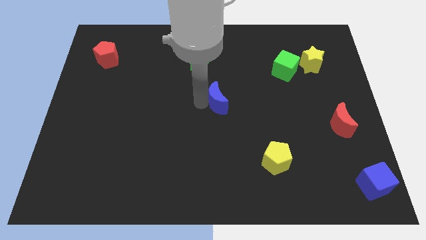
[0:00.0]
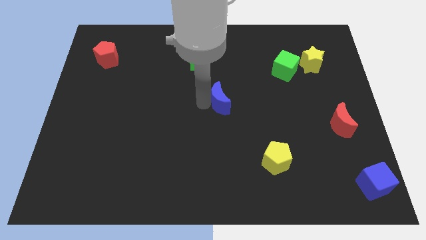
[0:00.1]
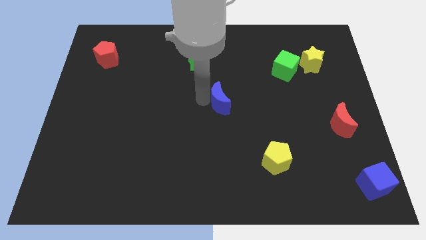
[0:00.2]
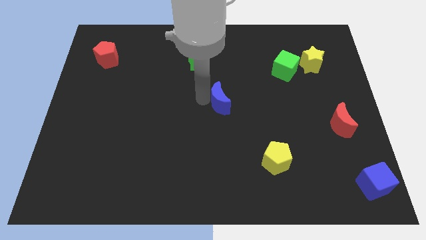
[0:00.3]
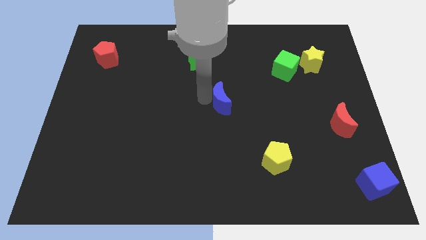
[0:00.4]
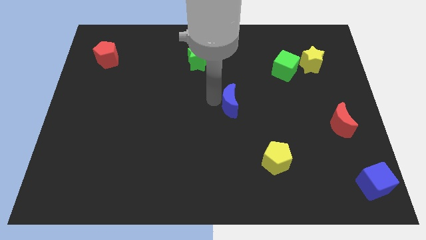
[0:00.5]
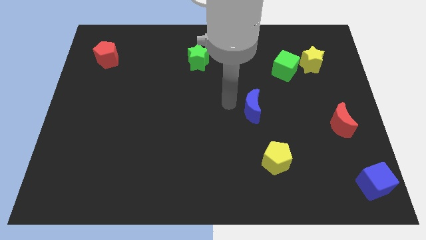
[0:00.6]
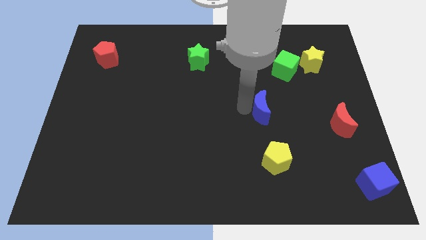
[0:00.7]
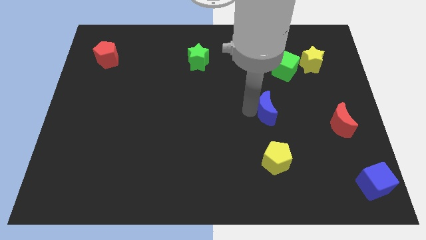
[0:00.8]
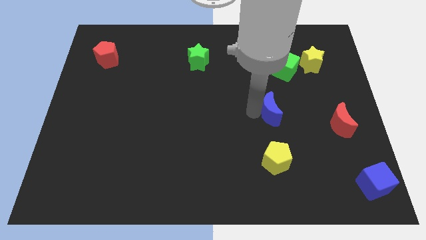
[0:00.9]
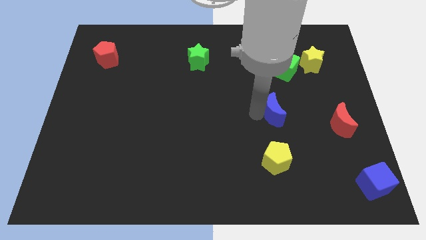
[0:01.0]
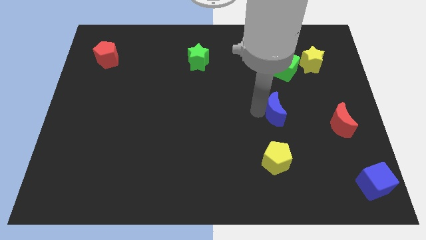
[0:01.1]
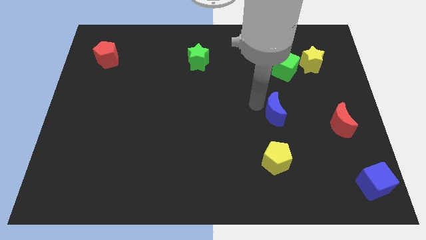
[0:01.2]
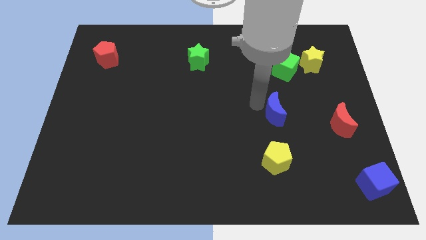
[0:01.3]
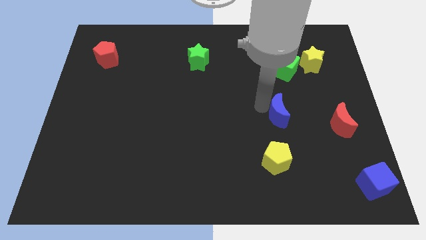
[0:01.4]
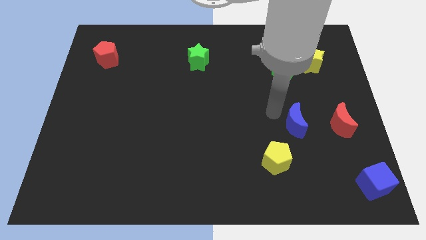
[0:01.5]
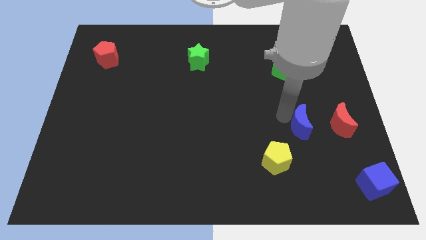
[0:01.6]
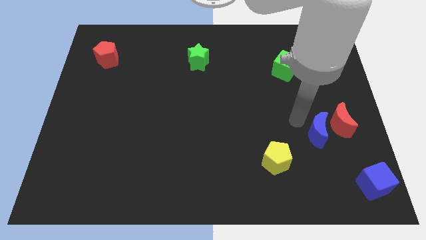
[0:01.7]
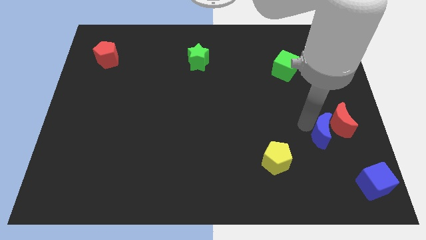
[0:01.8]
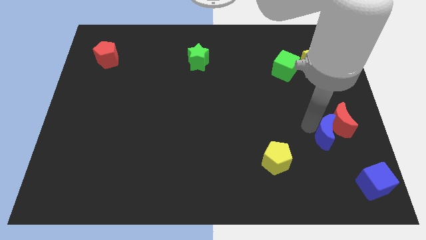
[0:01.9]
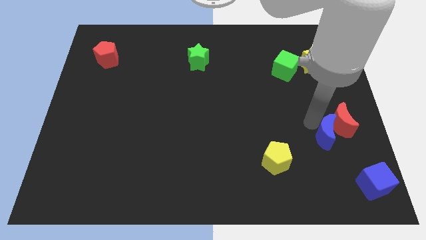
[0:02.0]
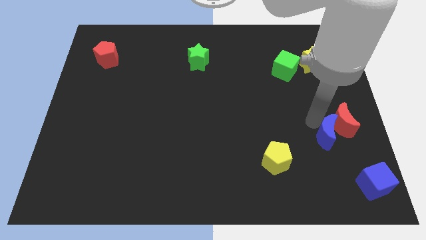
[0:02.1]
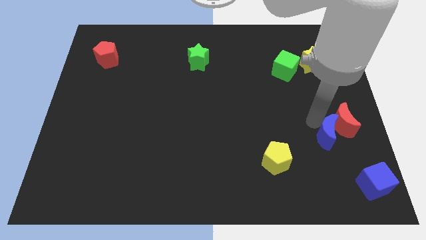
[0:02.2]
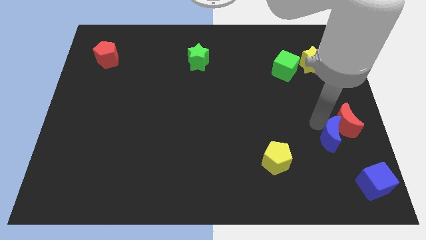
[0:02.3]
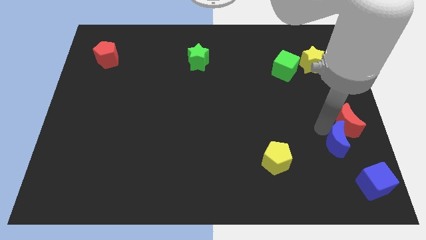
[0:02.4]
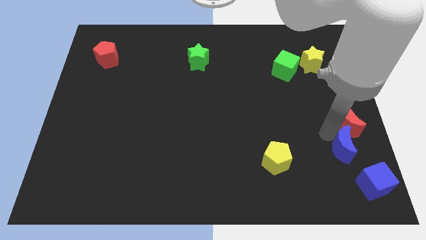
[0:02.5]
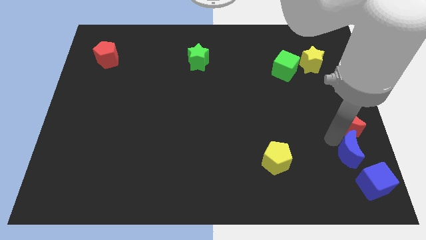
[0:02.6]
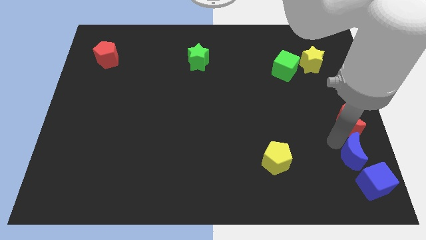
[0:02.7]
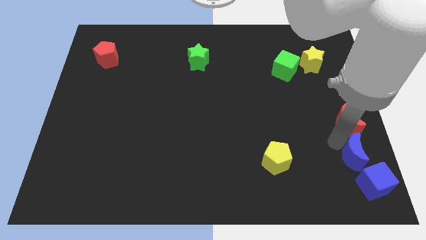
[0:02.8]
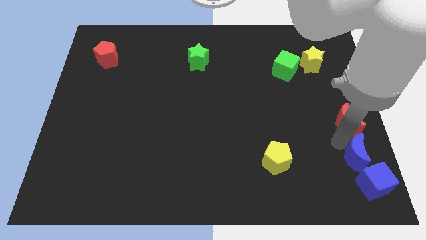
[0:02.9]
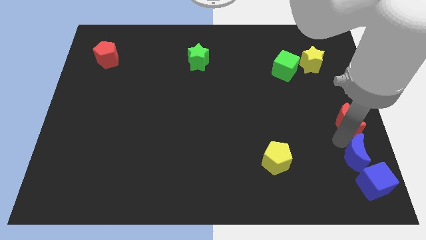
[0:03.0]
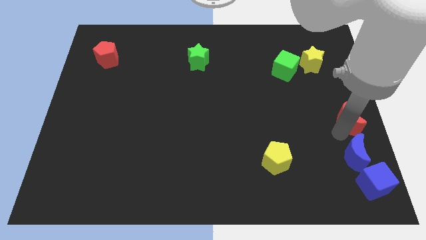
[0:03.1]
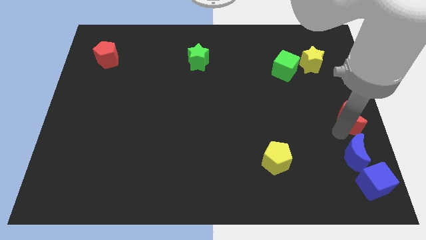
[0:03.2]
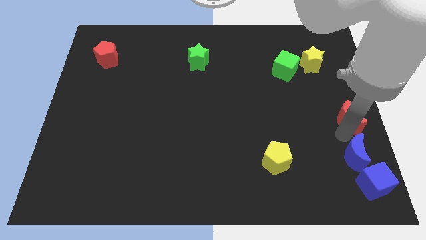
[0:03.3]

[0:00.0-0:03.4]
place blue crescent below red crescent

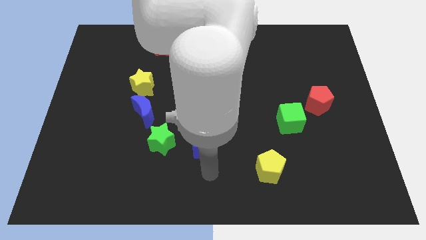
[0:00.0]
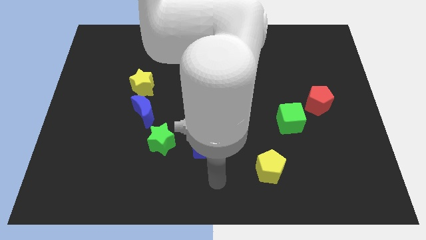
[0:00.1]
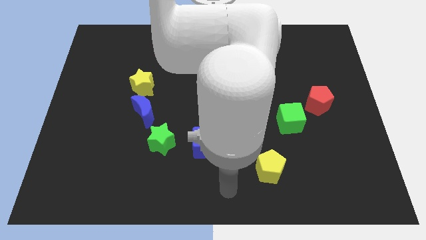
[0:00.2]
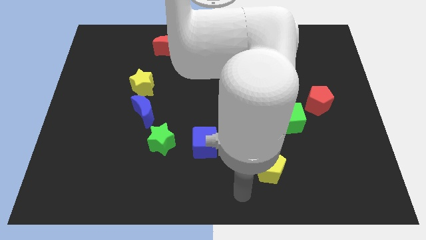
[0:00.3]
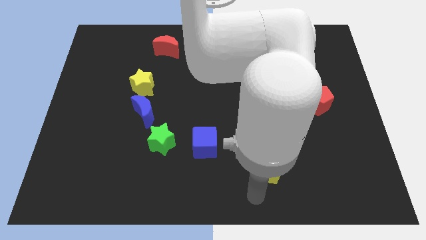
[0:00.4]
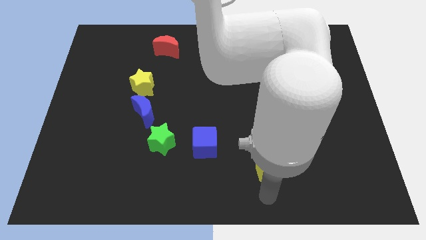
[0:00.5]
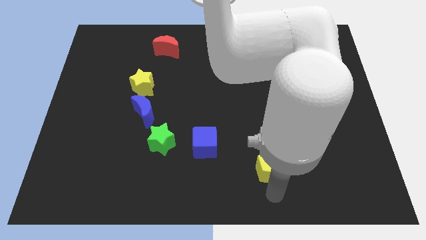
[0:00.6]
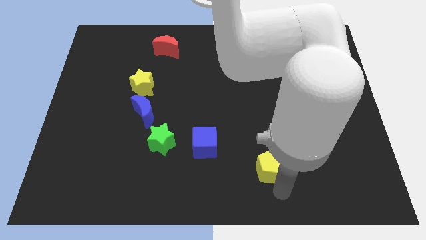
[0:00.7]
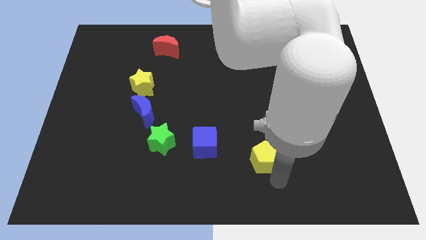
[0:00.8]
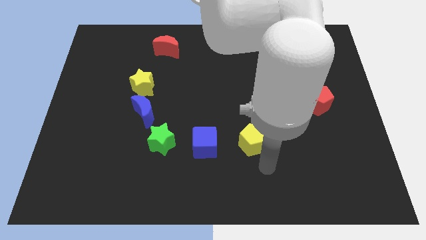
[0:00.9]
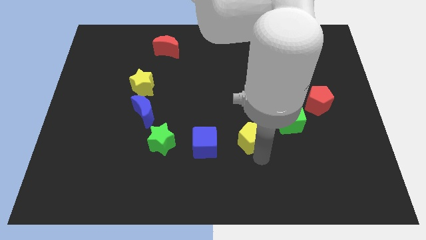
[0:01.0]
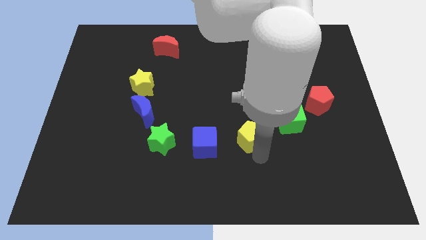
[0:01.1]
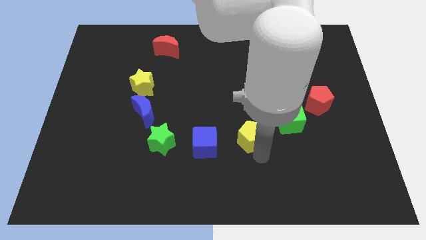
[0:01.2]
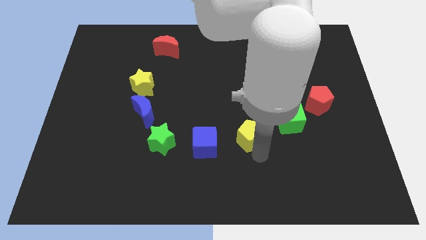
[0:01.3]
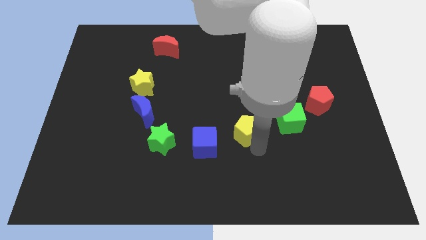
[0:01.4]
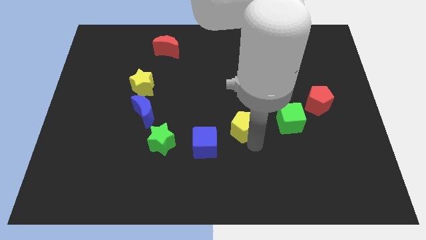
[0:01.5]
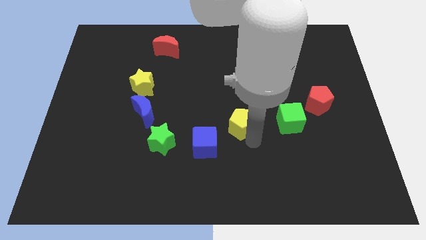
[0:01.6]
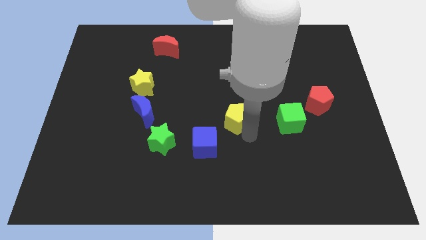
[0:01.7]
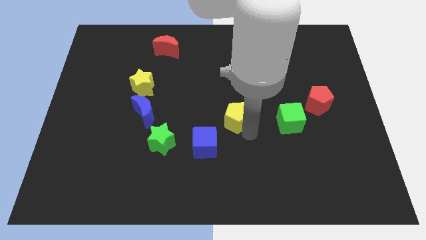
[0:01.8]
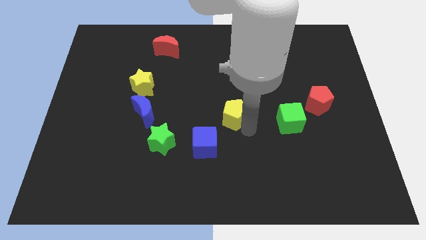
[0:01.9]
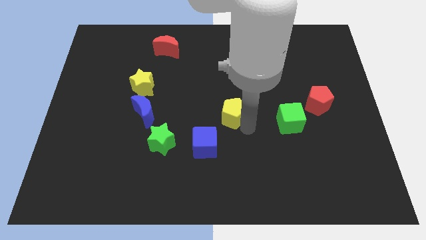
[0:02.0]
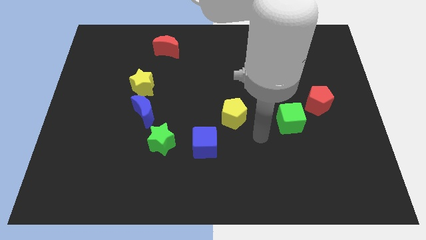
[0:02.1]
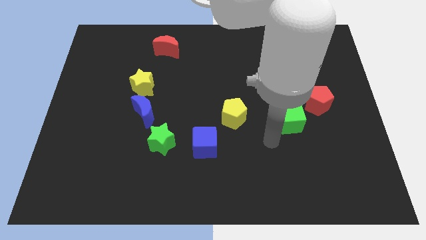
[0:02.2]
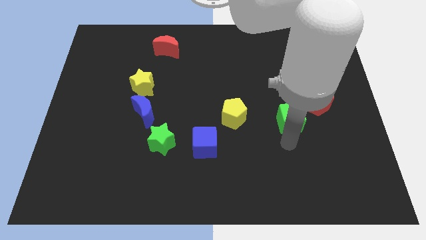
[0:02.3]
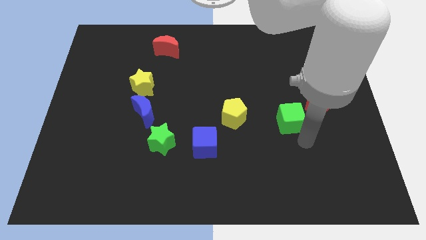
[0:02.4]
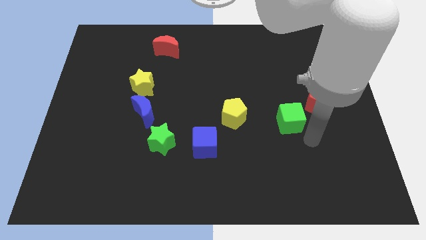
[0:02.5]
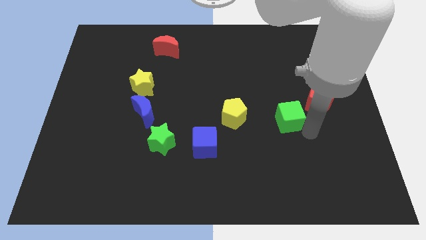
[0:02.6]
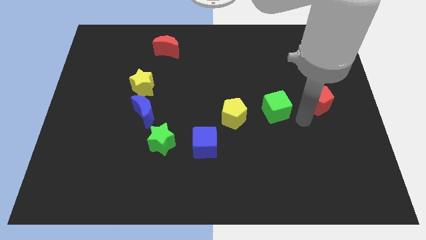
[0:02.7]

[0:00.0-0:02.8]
move the yellow pentagon to the left of the green cube

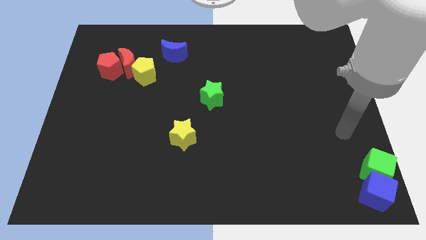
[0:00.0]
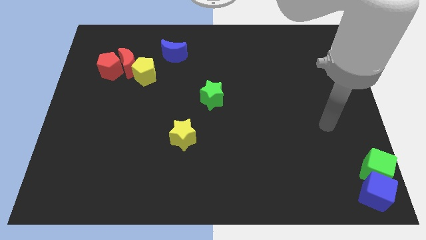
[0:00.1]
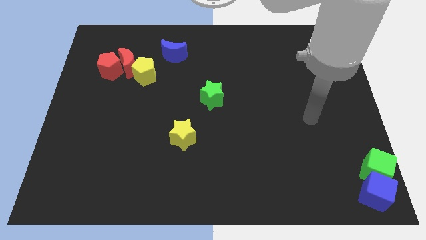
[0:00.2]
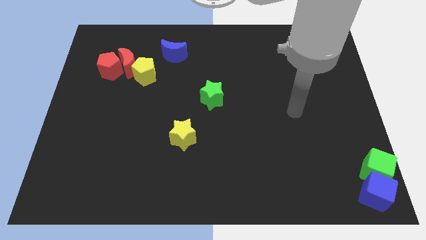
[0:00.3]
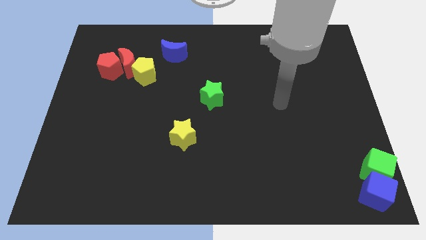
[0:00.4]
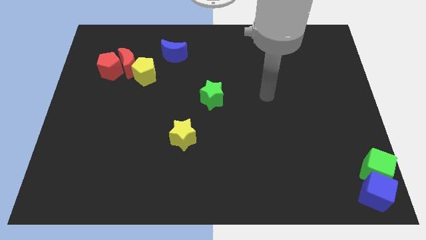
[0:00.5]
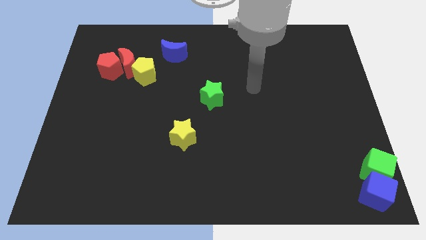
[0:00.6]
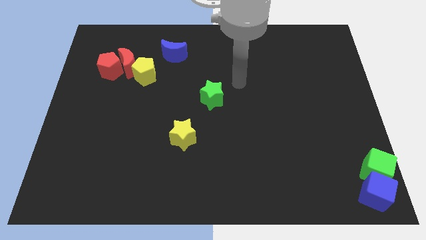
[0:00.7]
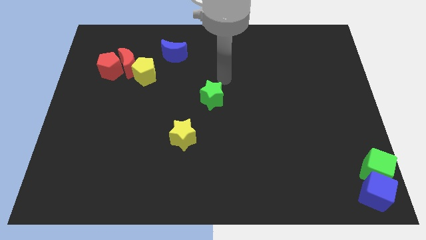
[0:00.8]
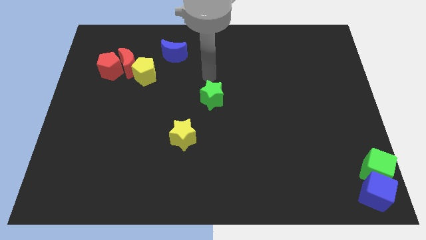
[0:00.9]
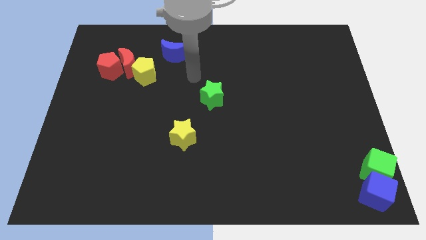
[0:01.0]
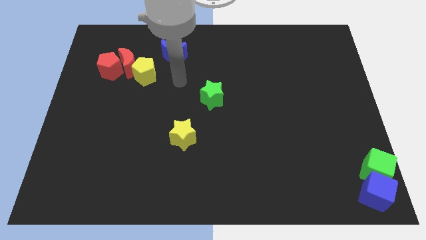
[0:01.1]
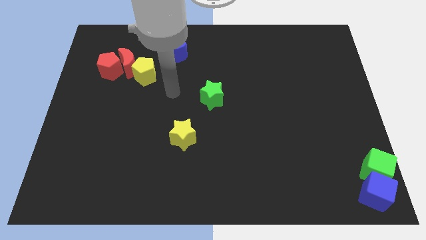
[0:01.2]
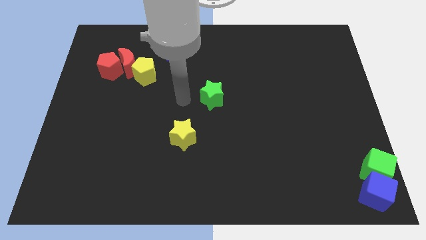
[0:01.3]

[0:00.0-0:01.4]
move your arm towards the green star

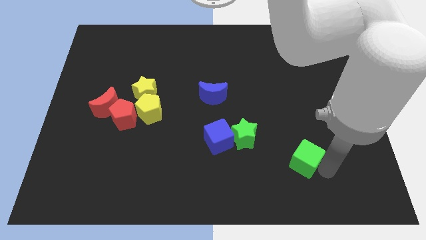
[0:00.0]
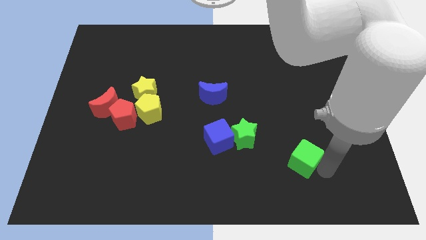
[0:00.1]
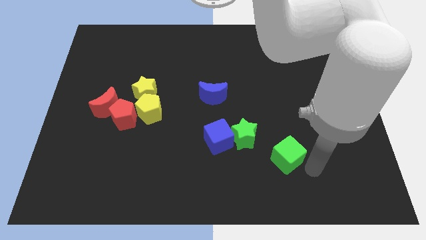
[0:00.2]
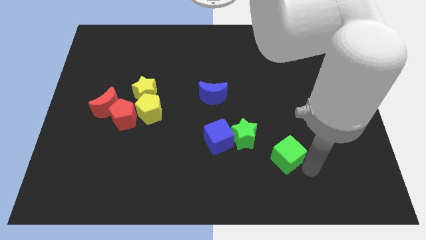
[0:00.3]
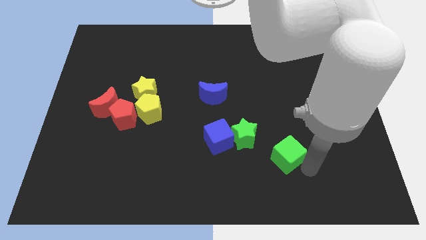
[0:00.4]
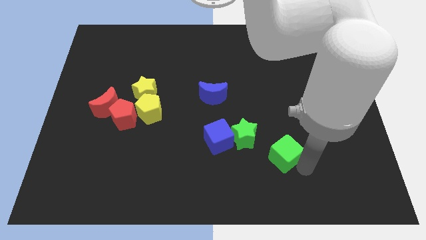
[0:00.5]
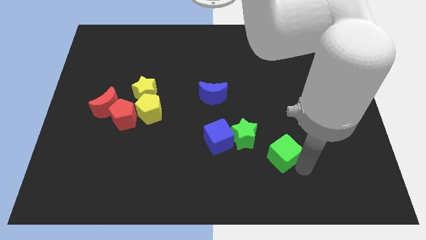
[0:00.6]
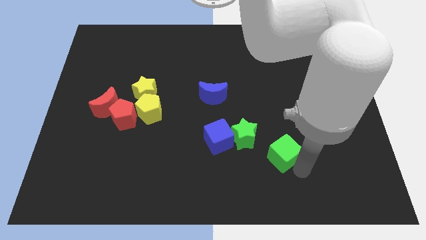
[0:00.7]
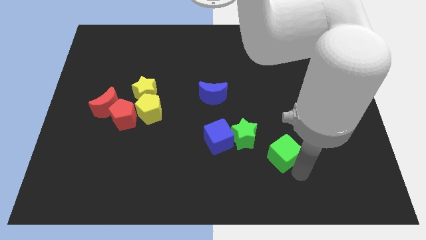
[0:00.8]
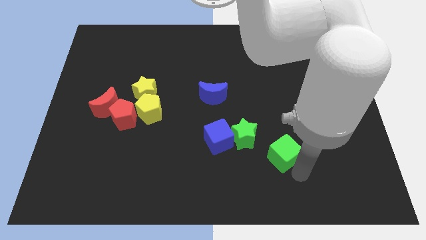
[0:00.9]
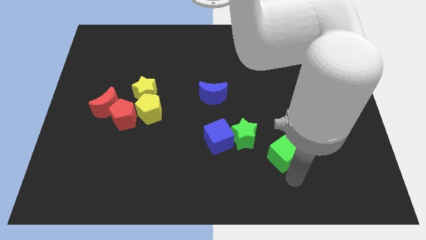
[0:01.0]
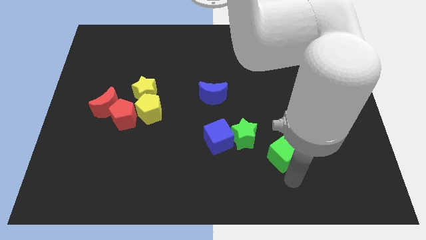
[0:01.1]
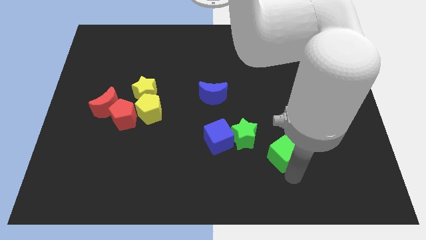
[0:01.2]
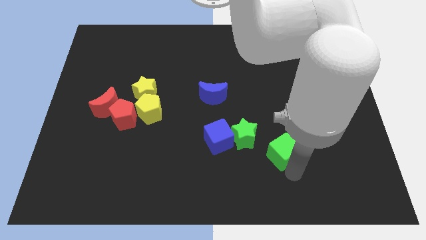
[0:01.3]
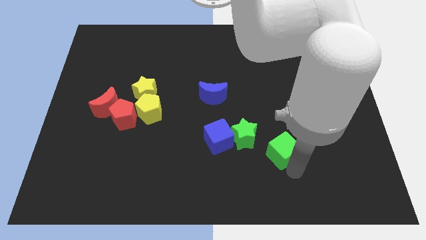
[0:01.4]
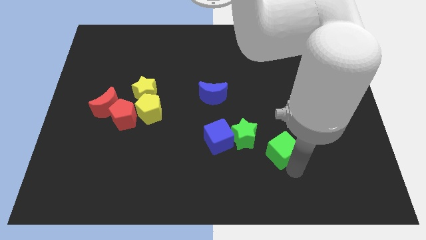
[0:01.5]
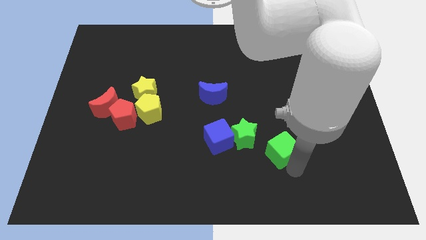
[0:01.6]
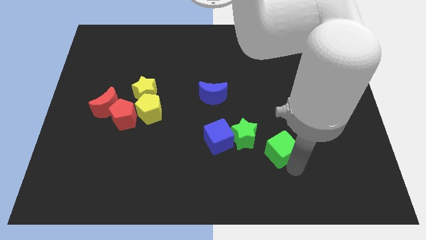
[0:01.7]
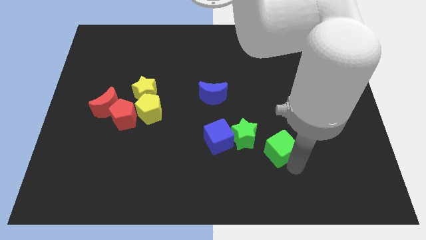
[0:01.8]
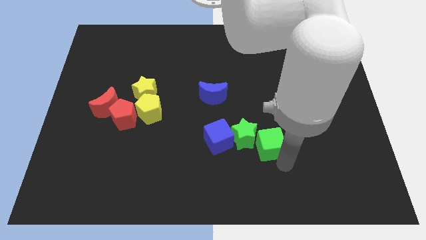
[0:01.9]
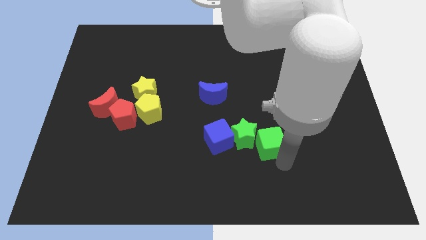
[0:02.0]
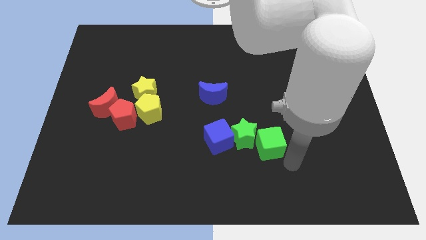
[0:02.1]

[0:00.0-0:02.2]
move green cube on the right side of green star
